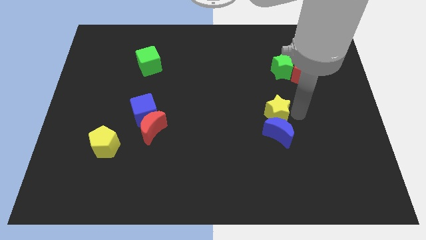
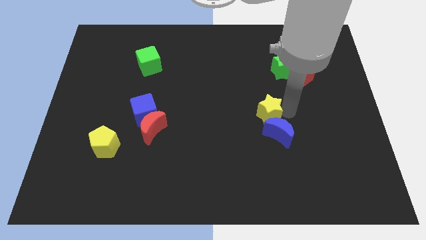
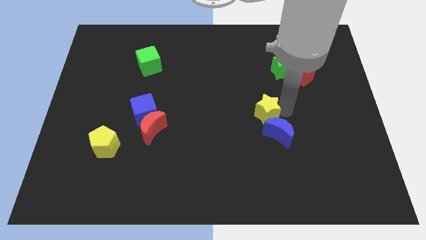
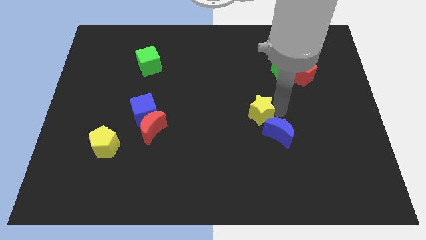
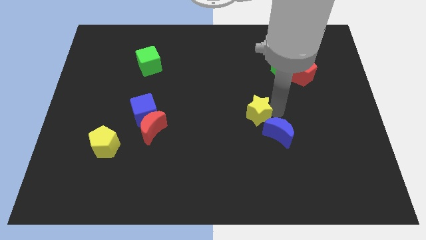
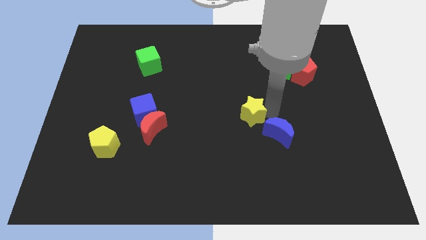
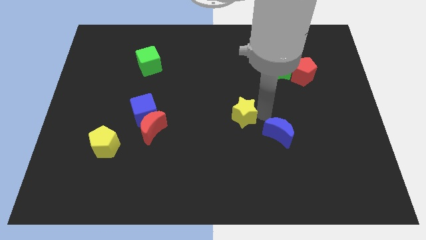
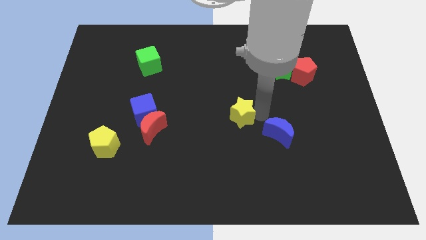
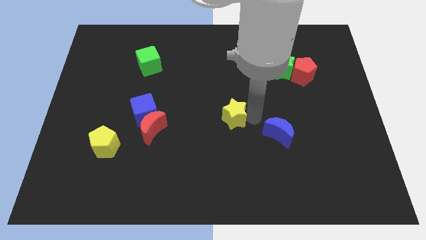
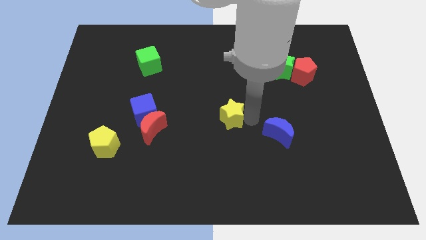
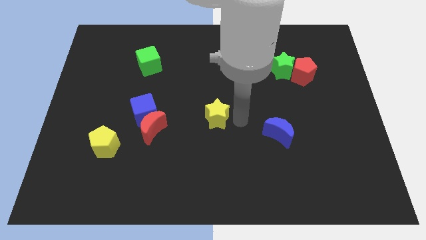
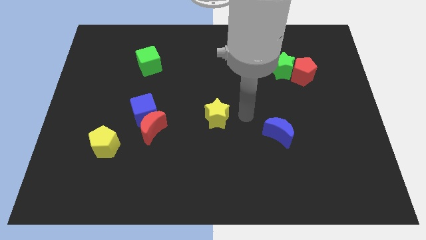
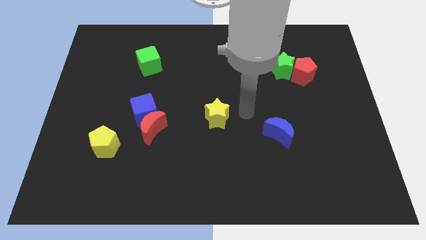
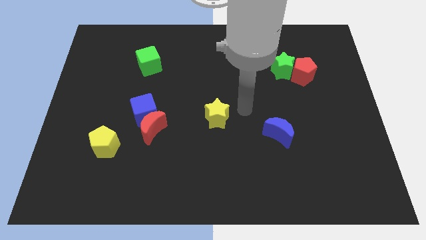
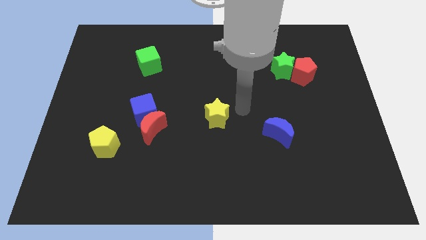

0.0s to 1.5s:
move yellow star away from the blue moon

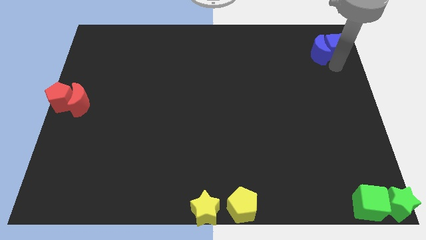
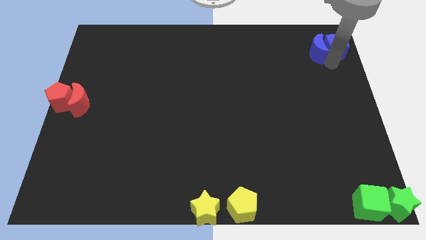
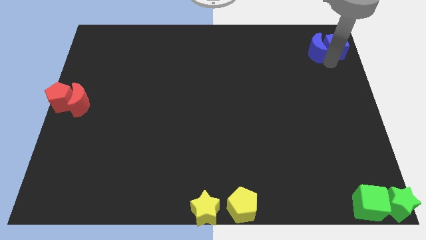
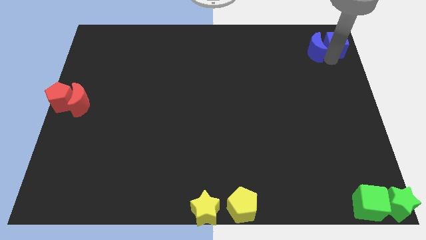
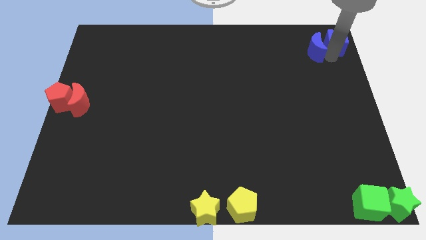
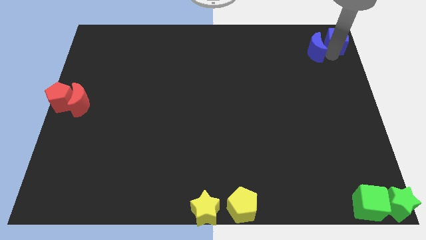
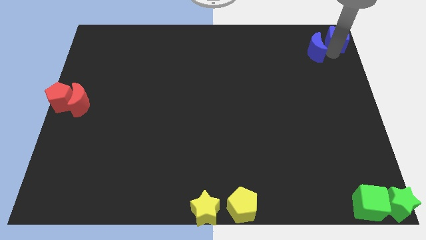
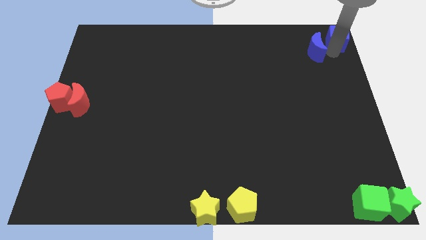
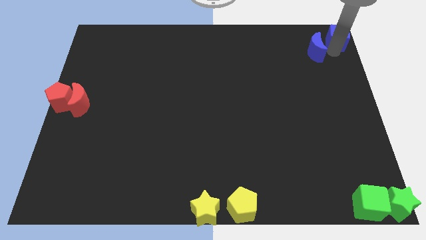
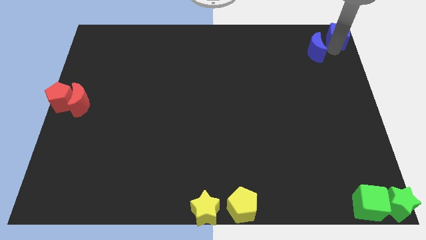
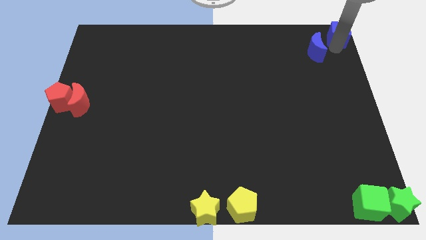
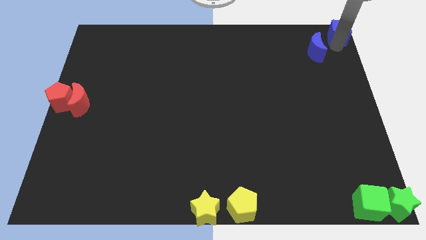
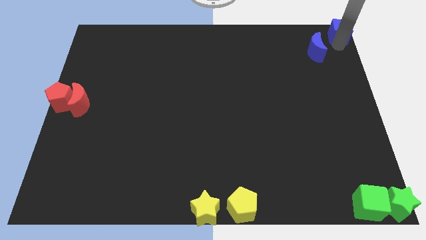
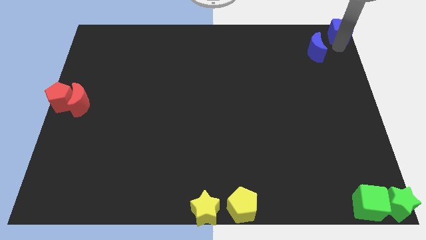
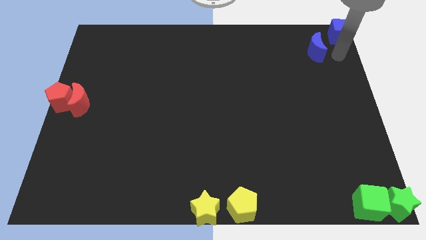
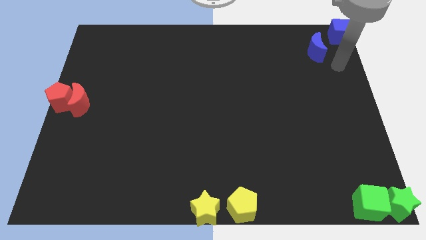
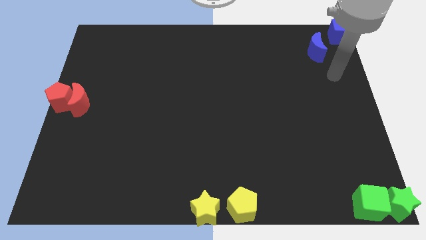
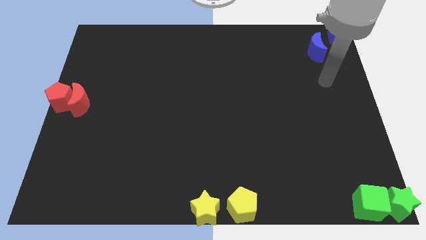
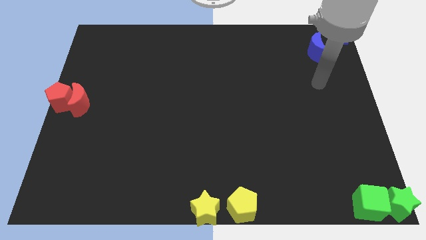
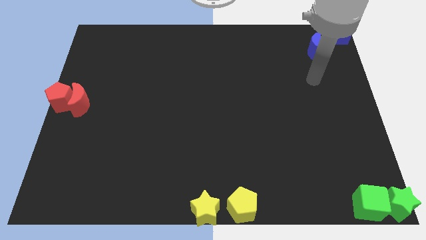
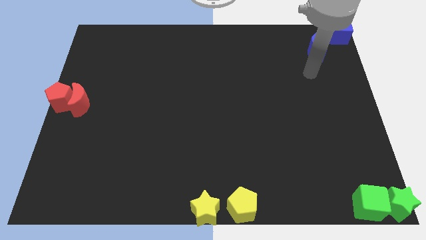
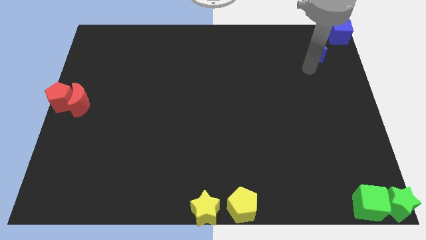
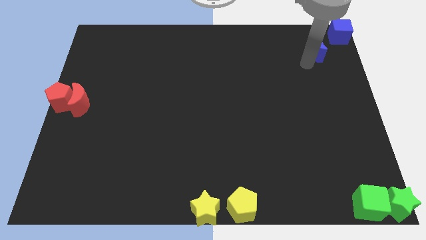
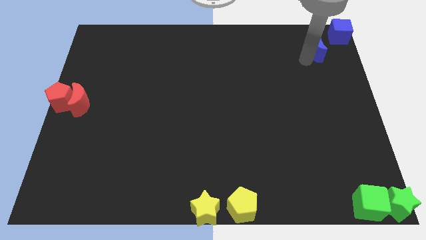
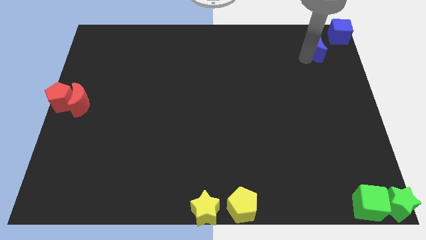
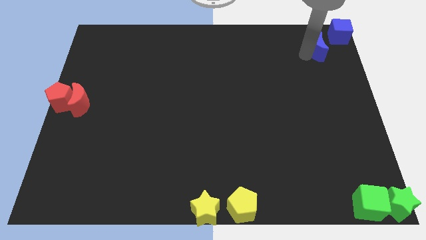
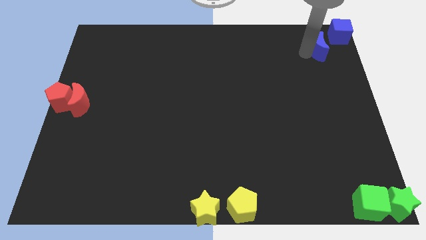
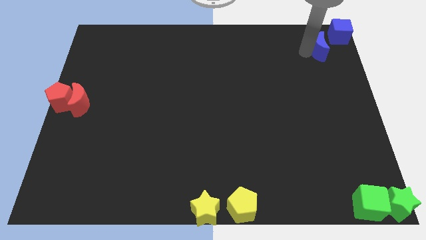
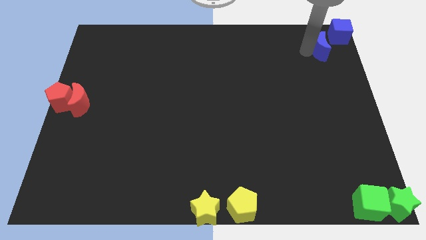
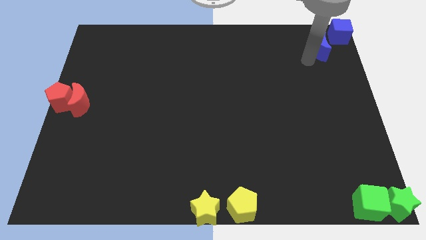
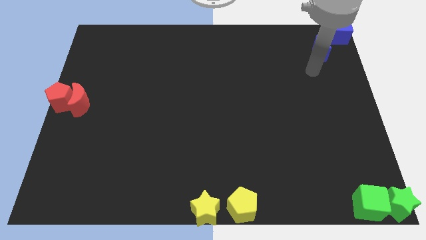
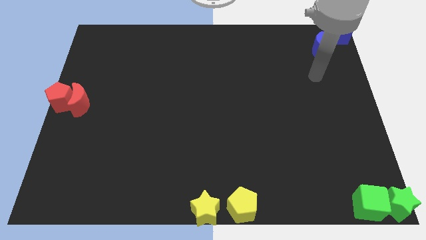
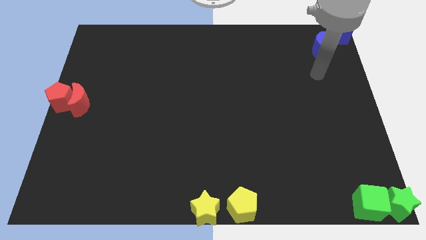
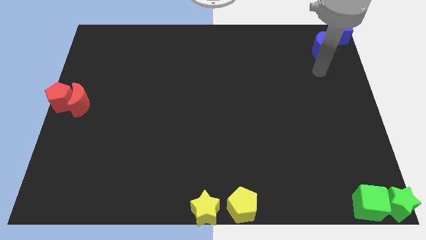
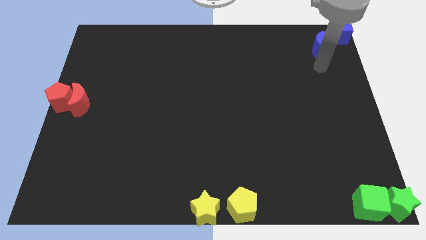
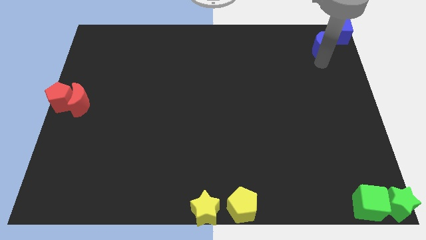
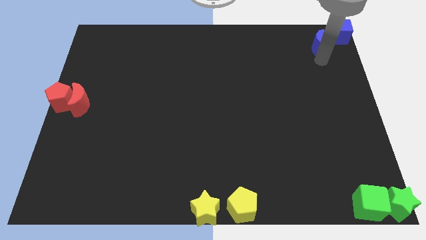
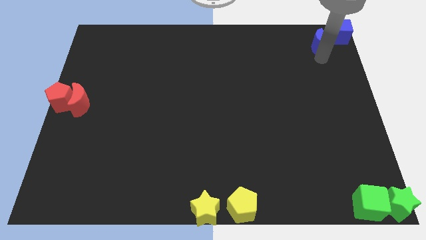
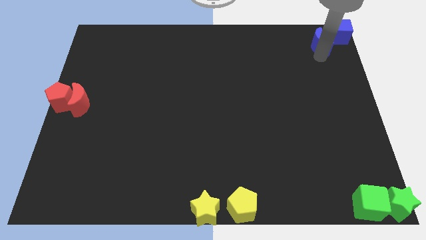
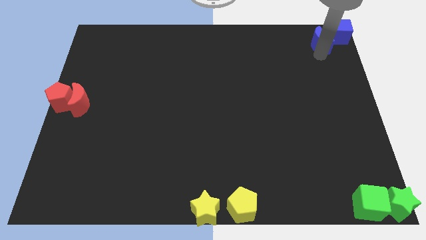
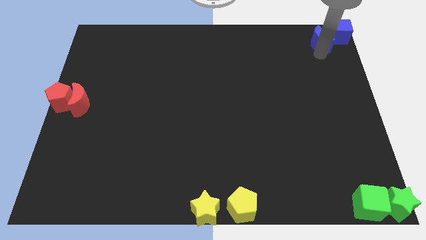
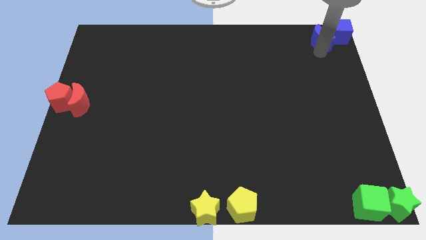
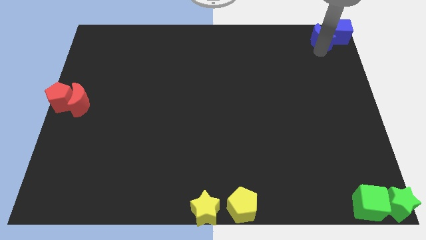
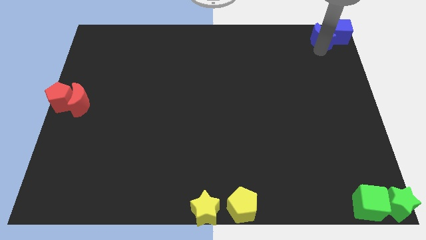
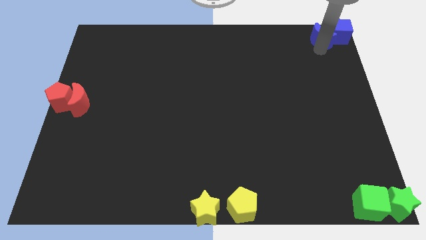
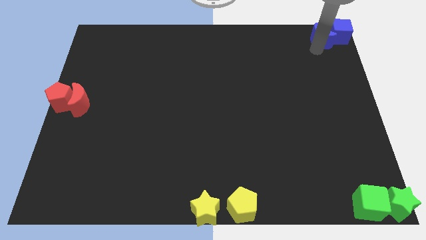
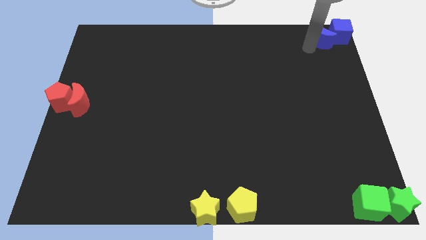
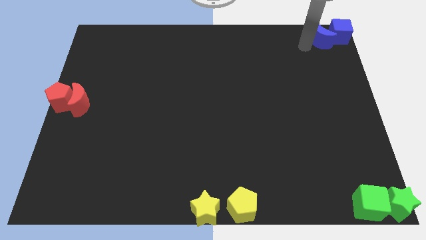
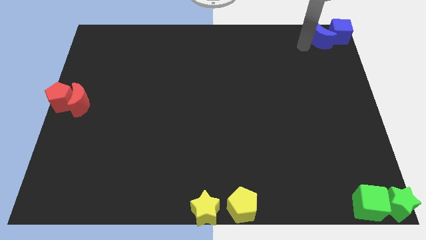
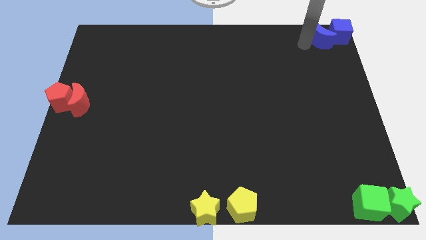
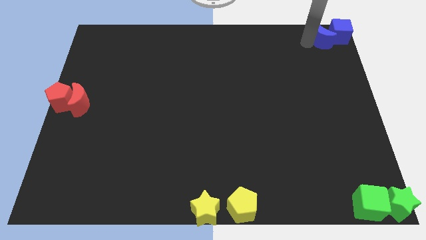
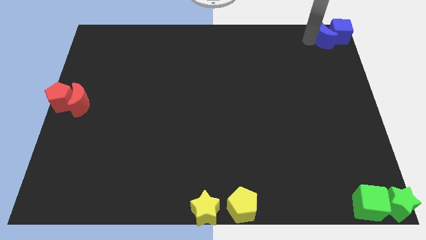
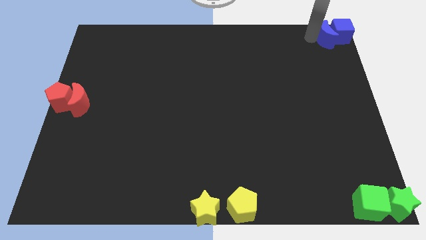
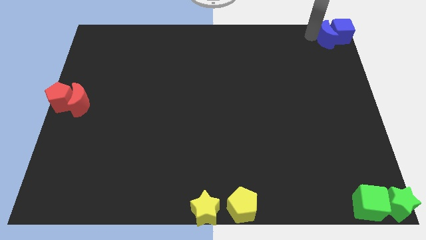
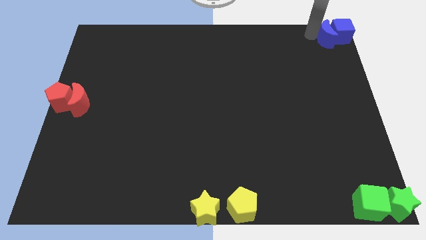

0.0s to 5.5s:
move the blue blocks to the top right corner of the table

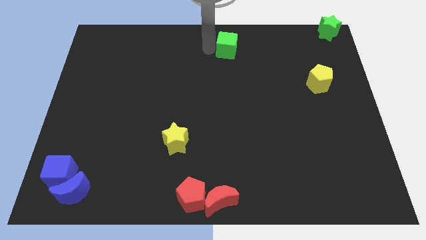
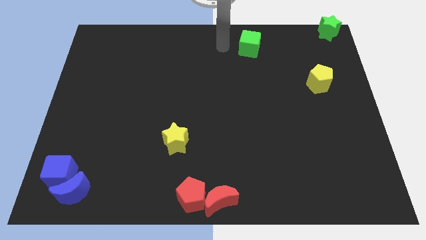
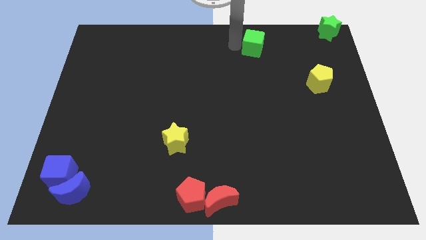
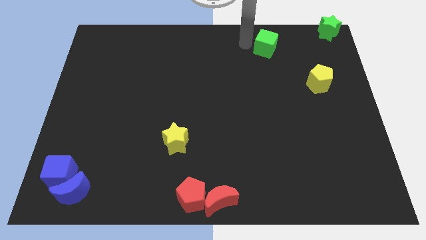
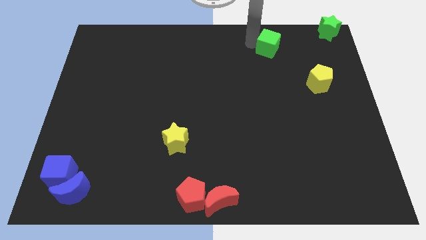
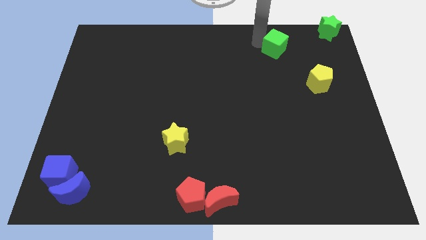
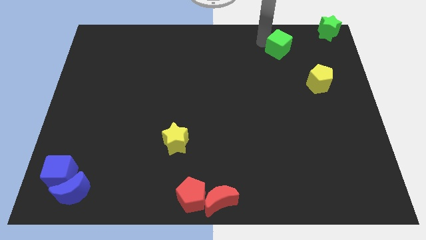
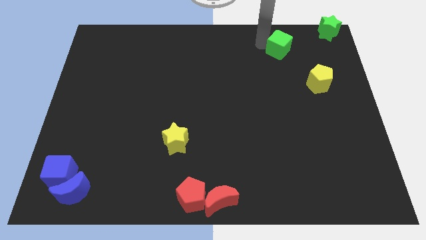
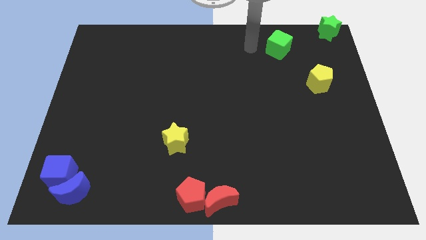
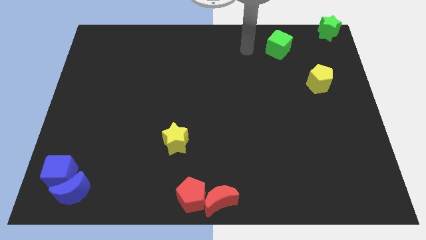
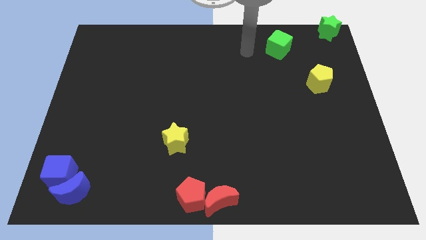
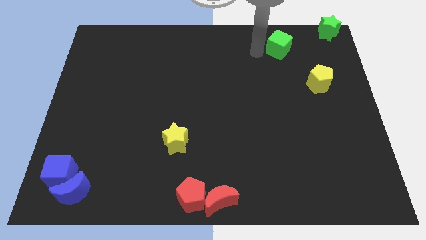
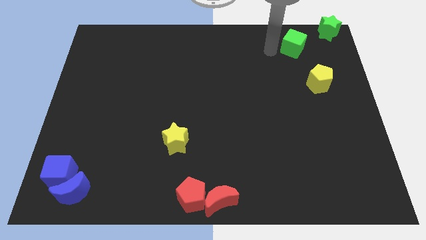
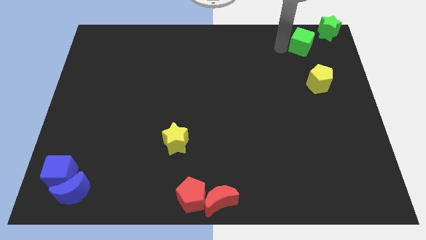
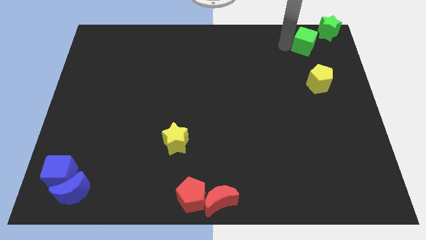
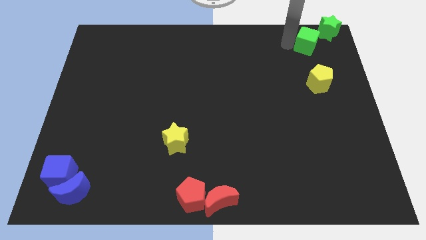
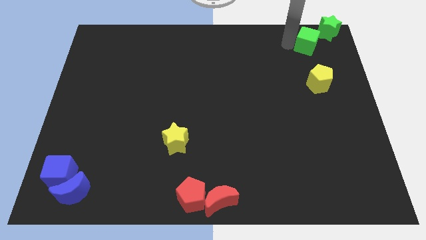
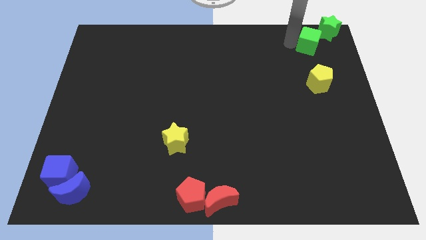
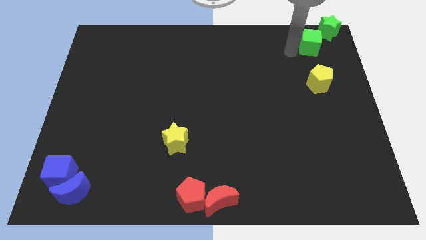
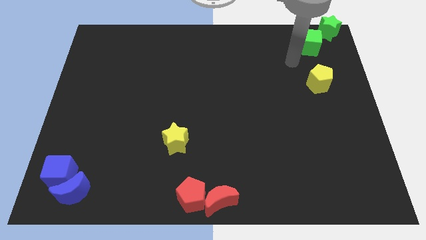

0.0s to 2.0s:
place green cube to the bottom left of the green star

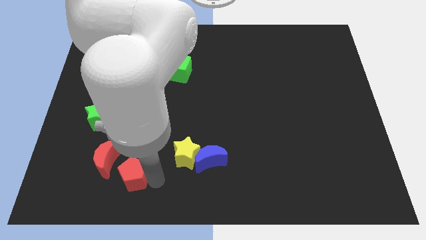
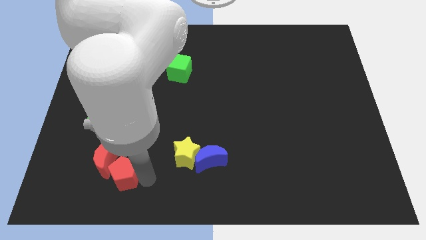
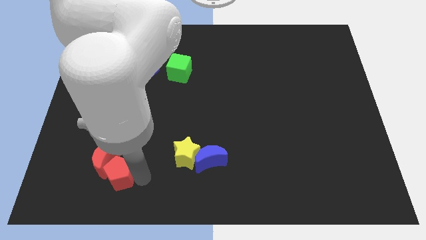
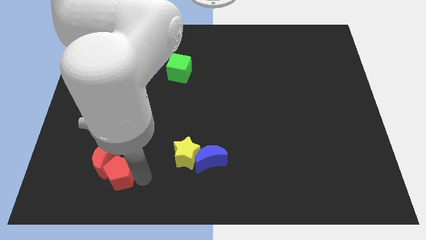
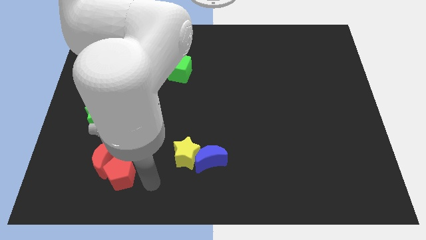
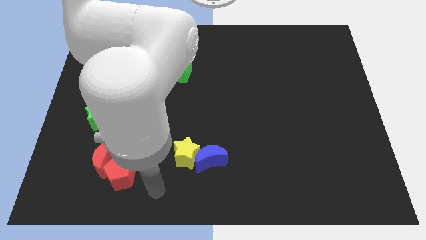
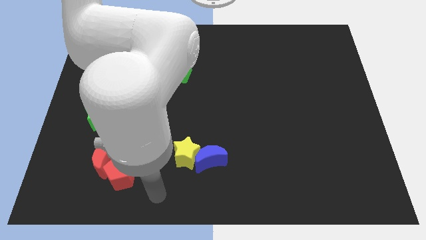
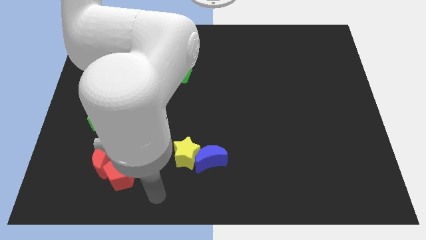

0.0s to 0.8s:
push the red pentagon into red crescent
